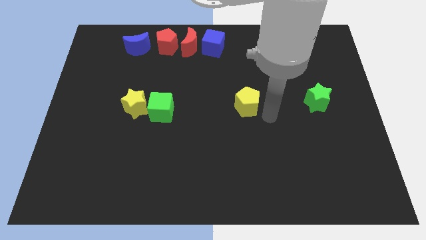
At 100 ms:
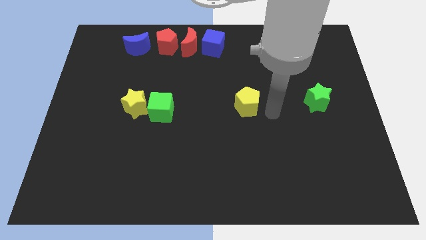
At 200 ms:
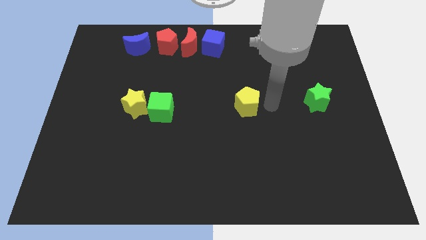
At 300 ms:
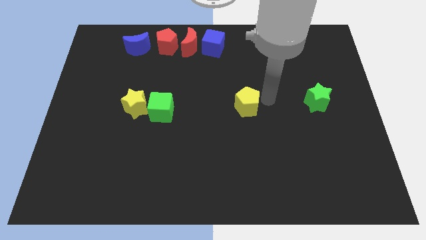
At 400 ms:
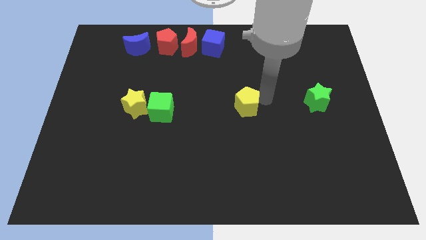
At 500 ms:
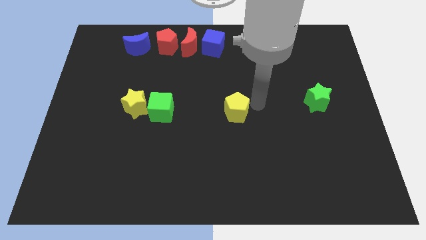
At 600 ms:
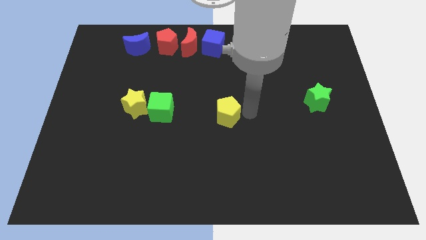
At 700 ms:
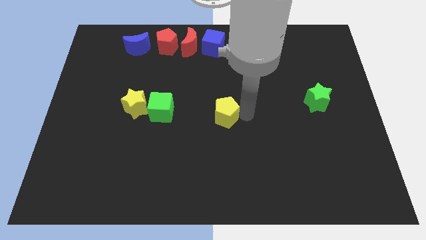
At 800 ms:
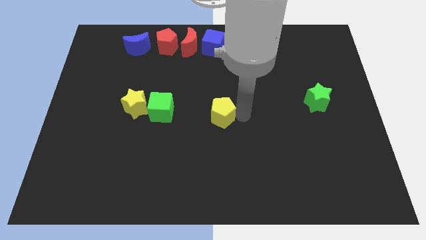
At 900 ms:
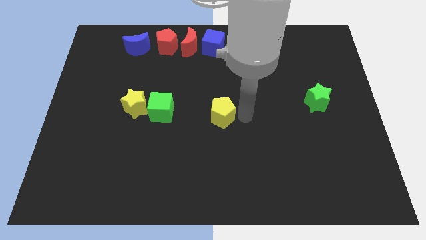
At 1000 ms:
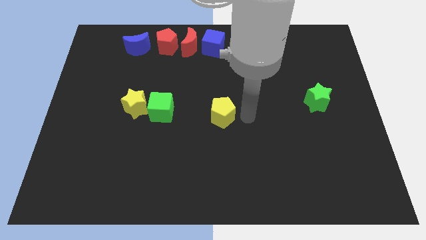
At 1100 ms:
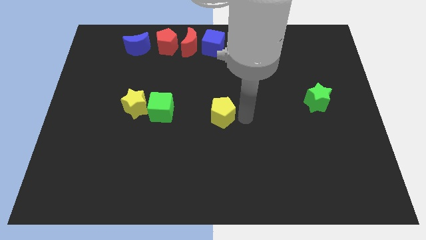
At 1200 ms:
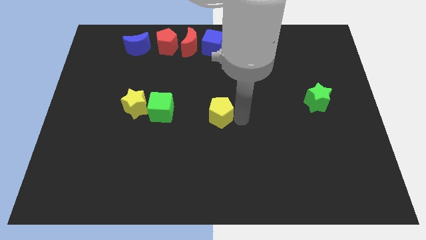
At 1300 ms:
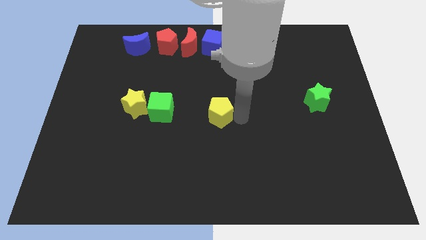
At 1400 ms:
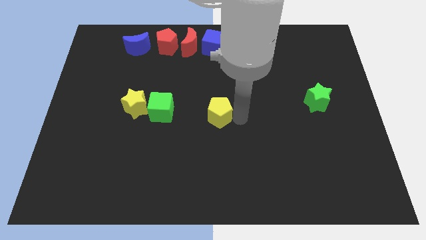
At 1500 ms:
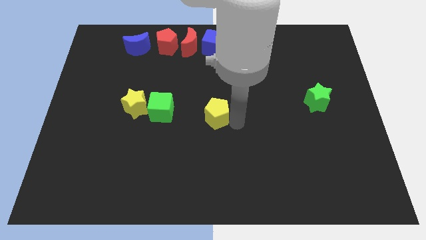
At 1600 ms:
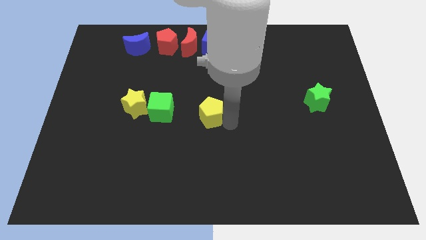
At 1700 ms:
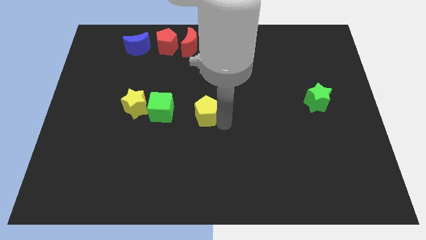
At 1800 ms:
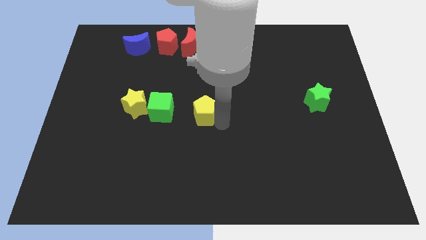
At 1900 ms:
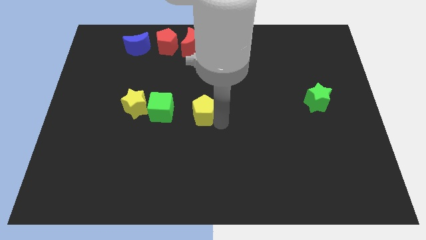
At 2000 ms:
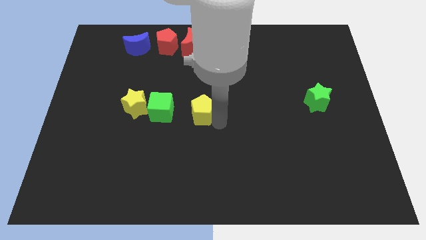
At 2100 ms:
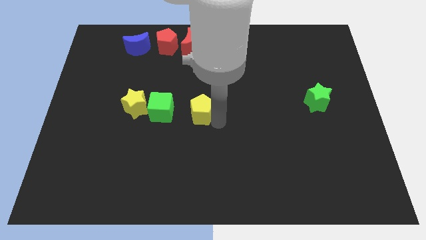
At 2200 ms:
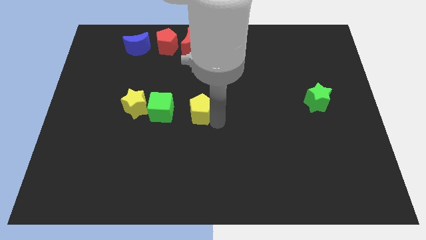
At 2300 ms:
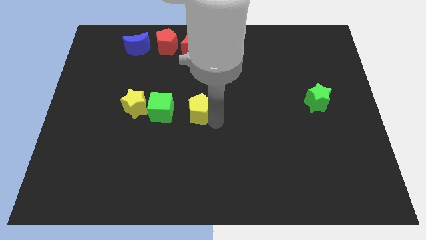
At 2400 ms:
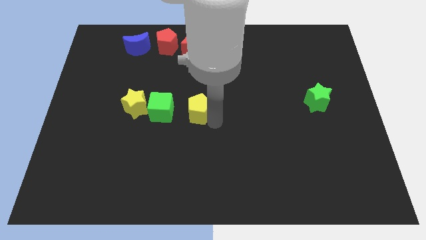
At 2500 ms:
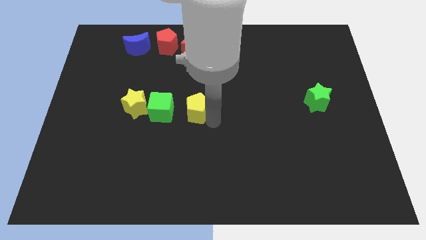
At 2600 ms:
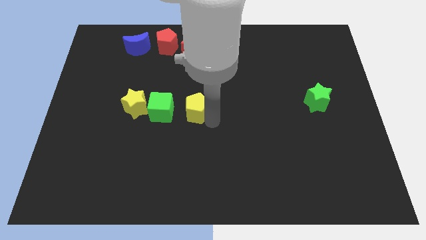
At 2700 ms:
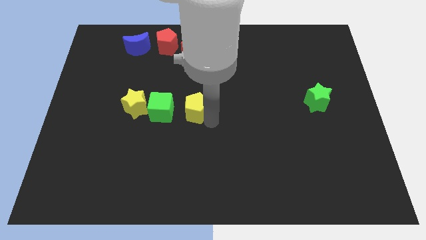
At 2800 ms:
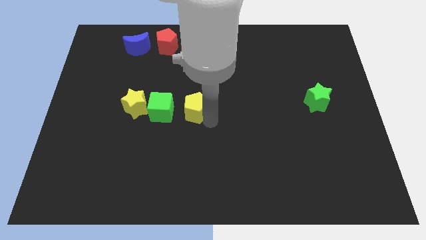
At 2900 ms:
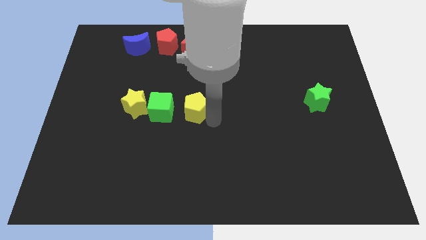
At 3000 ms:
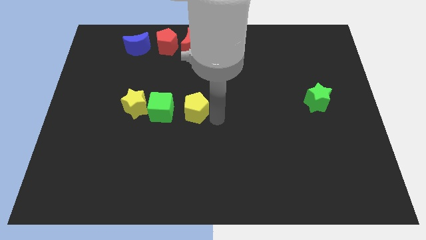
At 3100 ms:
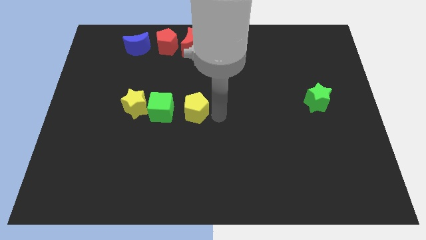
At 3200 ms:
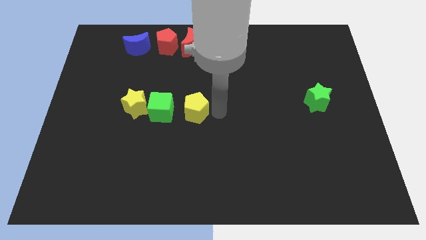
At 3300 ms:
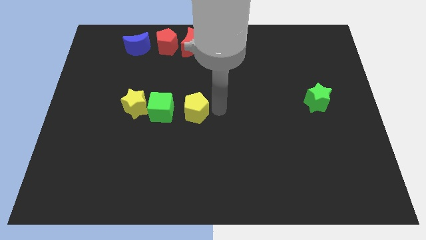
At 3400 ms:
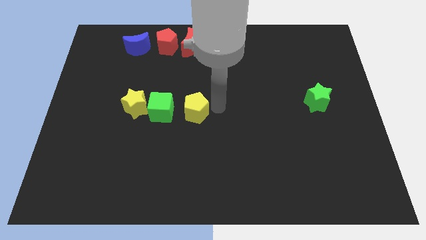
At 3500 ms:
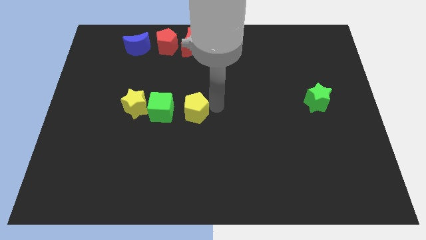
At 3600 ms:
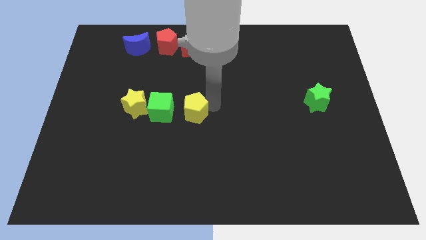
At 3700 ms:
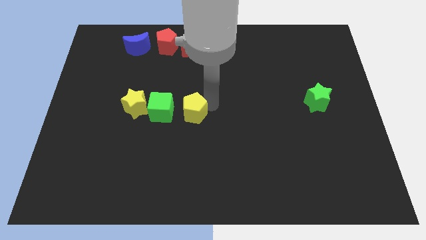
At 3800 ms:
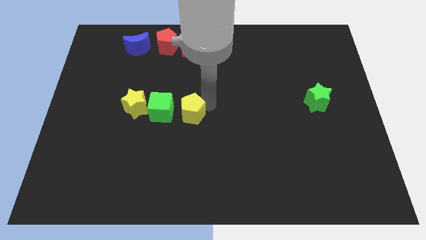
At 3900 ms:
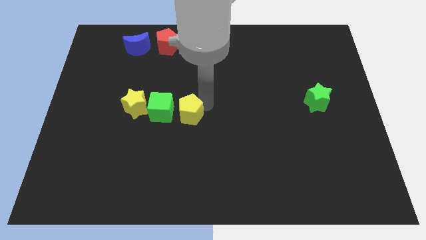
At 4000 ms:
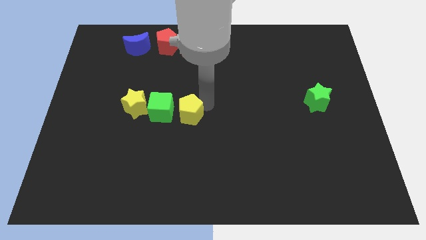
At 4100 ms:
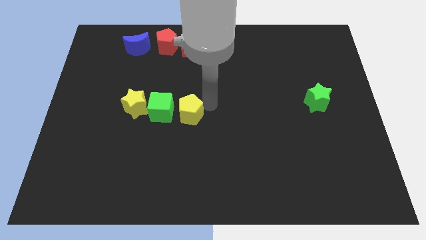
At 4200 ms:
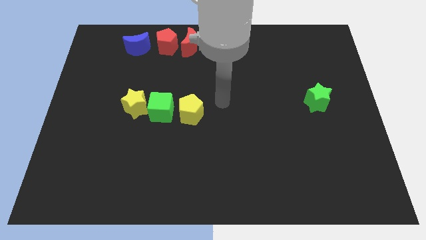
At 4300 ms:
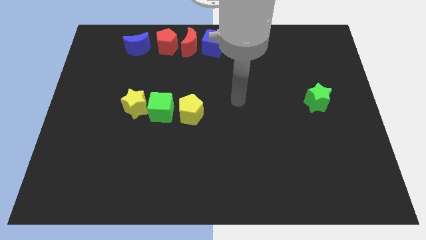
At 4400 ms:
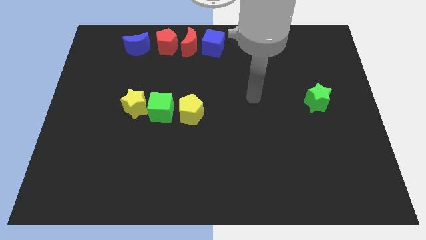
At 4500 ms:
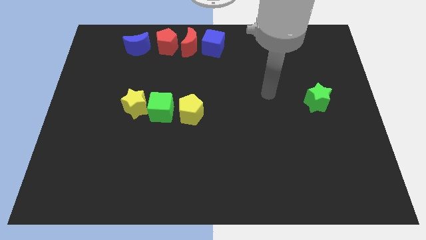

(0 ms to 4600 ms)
place yellow pentagon to the right of green cube

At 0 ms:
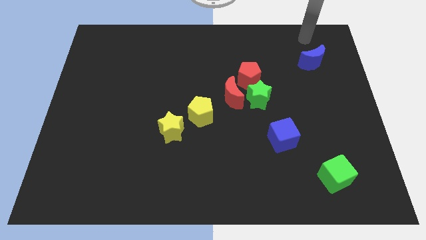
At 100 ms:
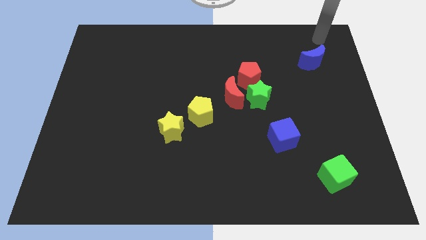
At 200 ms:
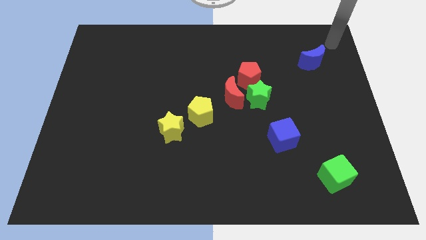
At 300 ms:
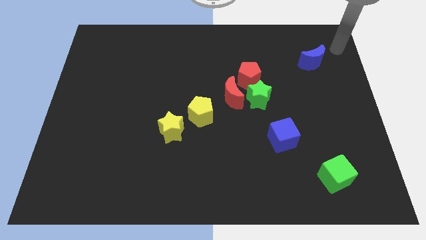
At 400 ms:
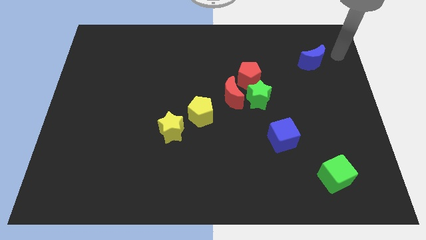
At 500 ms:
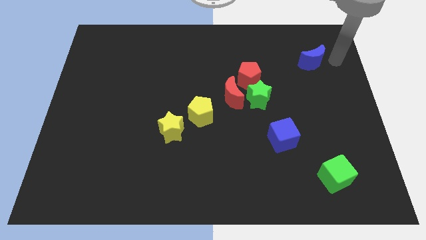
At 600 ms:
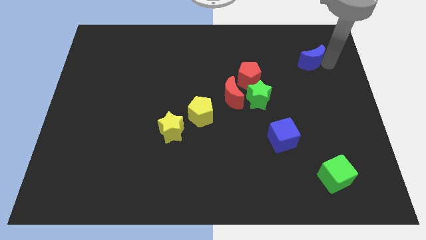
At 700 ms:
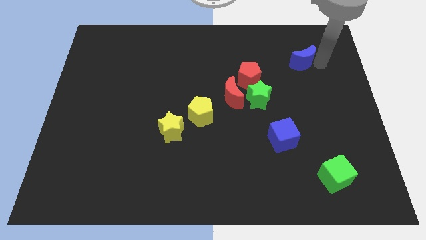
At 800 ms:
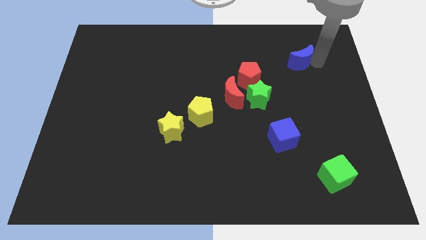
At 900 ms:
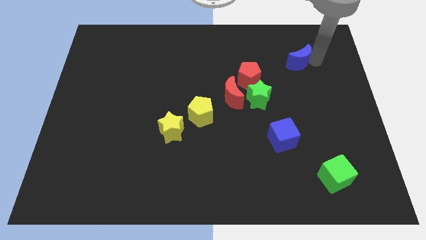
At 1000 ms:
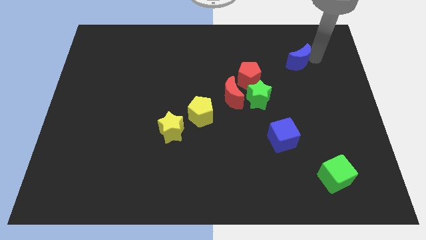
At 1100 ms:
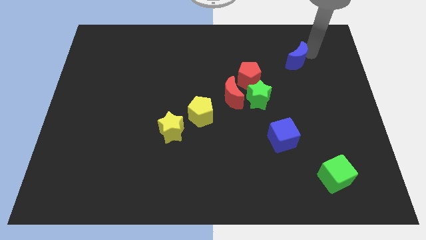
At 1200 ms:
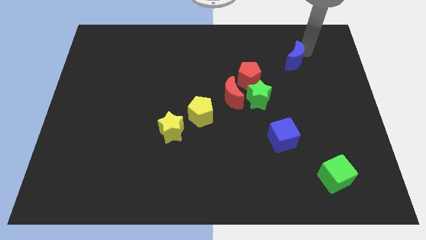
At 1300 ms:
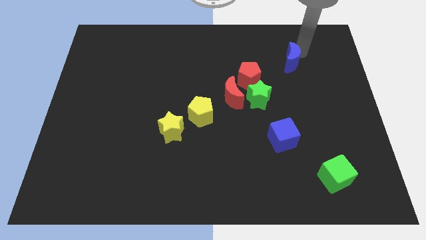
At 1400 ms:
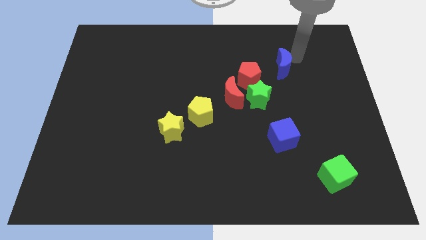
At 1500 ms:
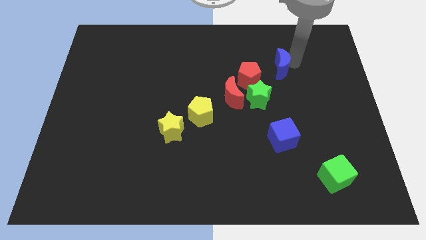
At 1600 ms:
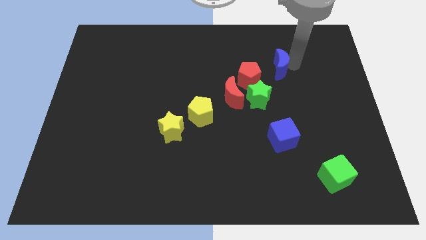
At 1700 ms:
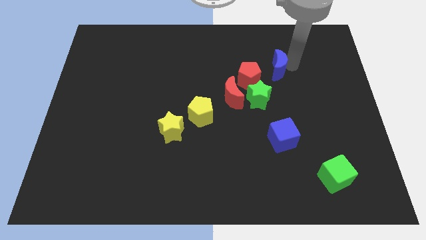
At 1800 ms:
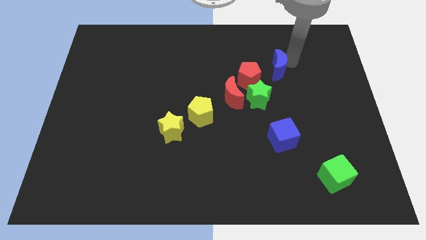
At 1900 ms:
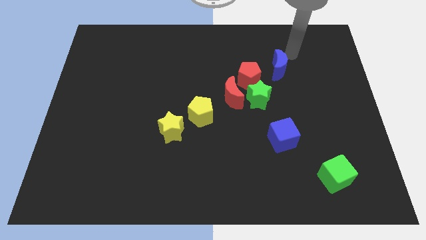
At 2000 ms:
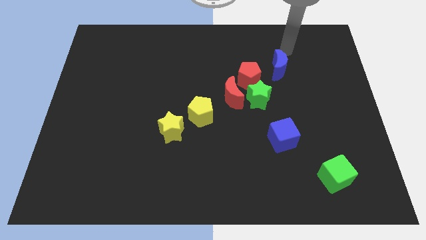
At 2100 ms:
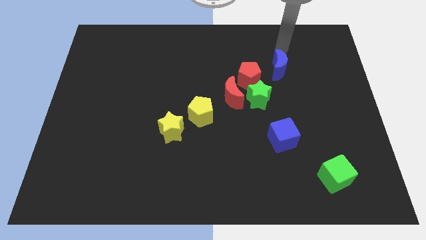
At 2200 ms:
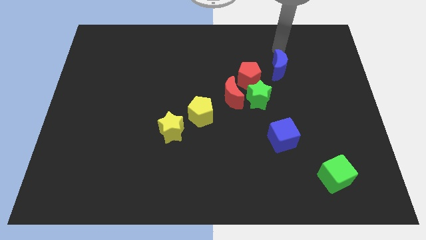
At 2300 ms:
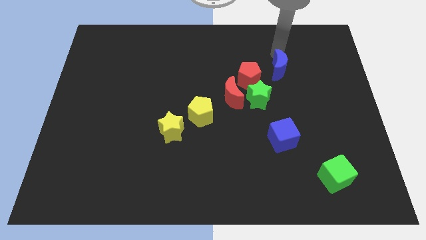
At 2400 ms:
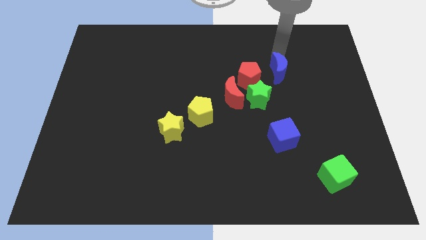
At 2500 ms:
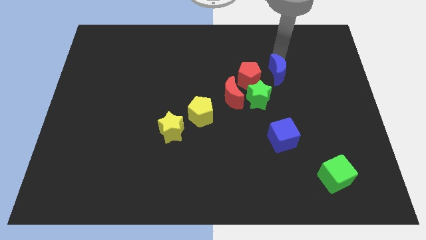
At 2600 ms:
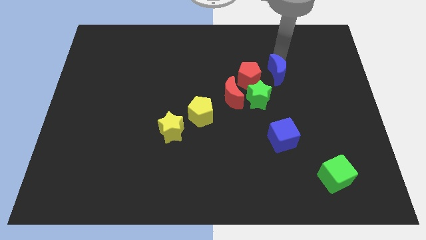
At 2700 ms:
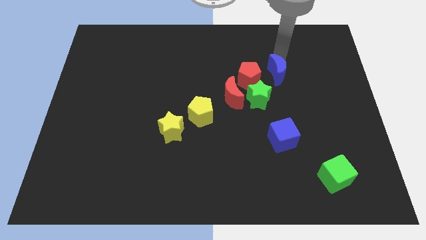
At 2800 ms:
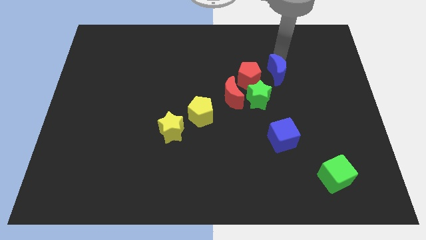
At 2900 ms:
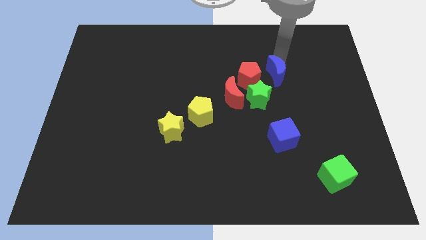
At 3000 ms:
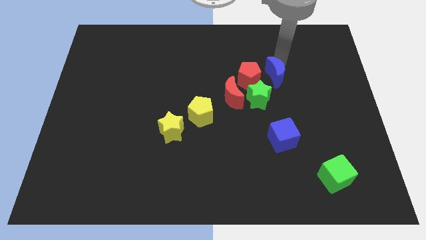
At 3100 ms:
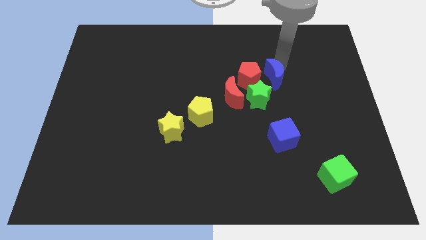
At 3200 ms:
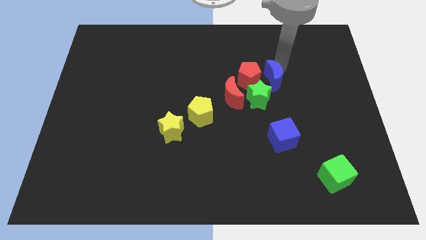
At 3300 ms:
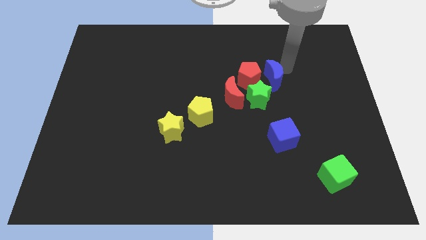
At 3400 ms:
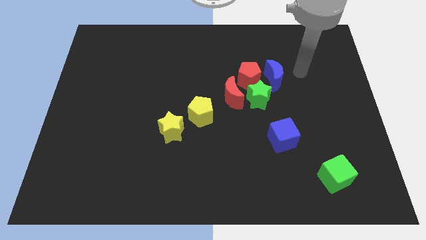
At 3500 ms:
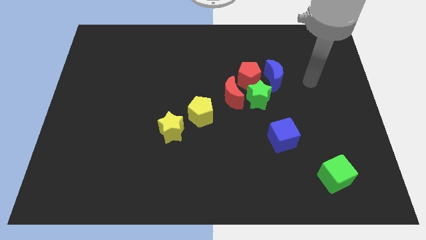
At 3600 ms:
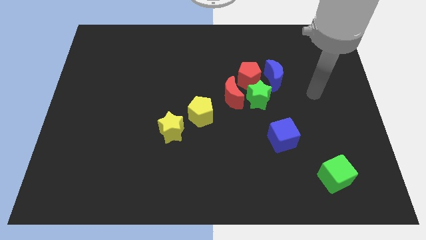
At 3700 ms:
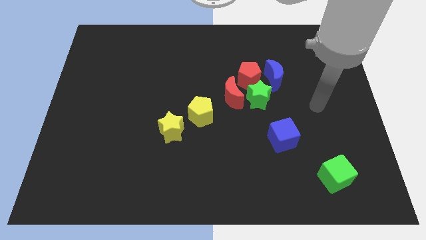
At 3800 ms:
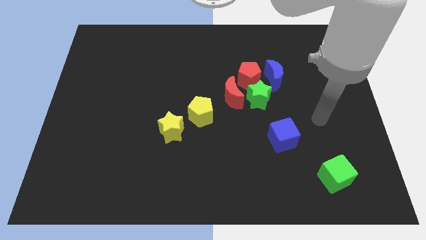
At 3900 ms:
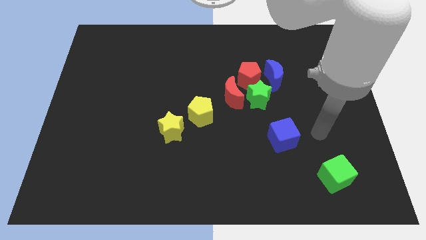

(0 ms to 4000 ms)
place the blue crescent right to the red pentagon

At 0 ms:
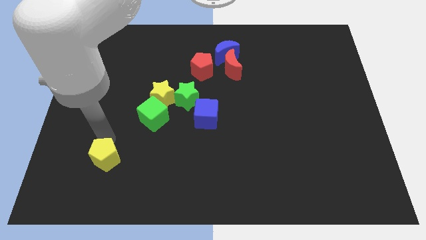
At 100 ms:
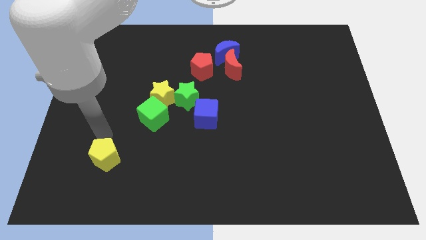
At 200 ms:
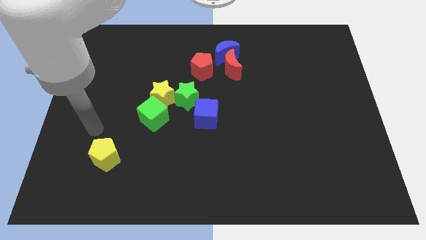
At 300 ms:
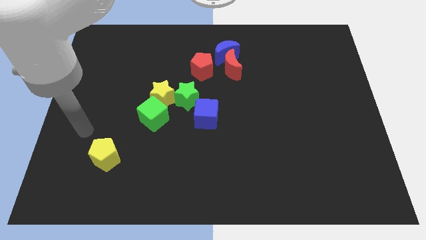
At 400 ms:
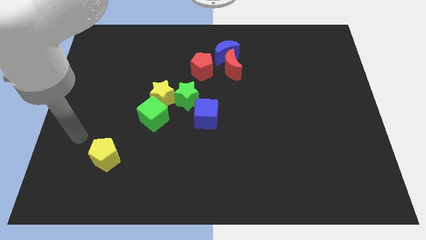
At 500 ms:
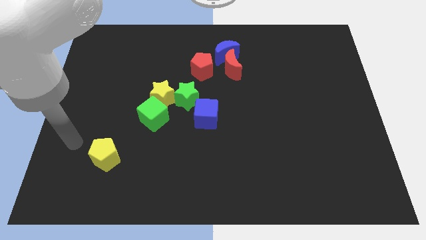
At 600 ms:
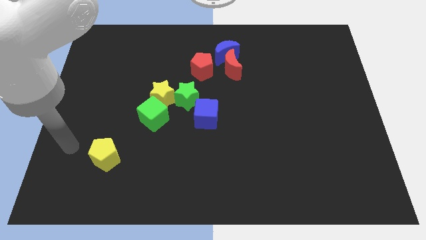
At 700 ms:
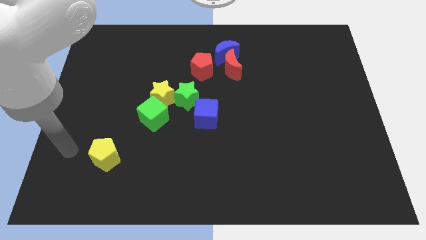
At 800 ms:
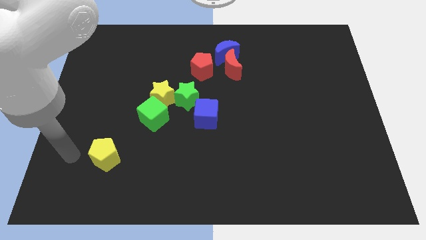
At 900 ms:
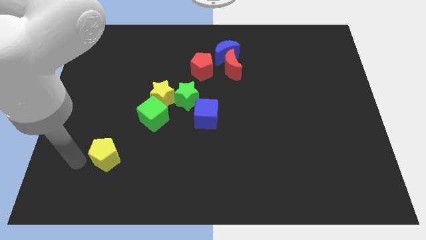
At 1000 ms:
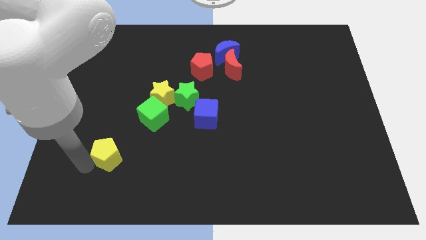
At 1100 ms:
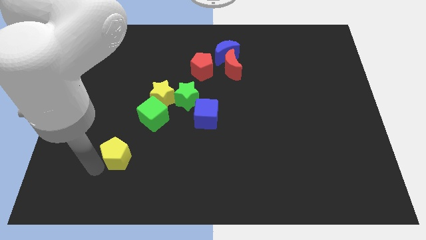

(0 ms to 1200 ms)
move your arm to left side of yellow pentagon
